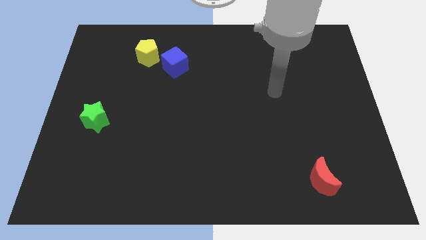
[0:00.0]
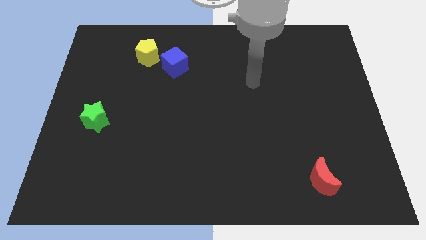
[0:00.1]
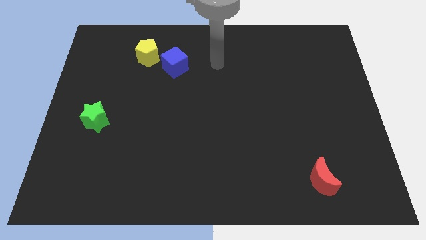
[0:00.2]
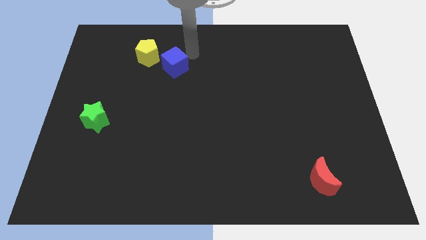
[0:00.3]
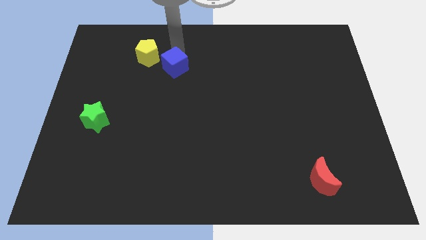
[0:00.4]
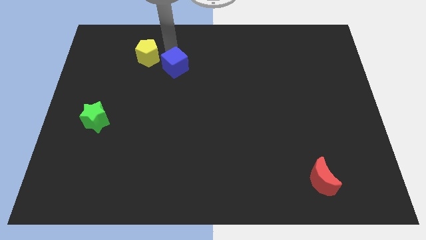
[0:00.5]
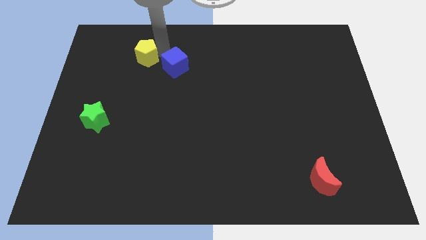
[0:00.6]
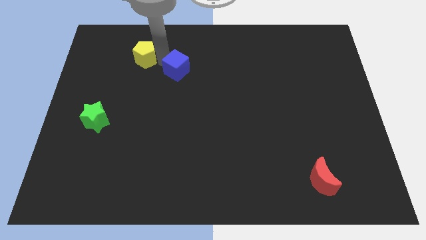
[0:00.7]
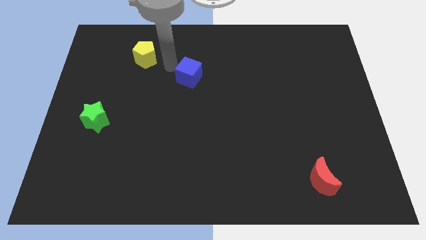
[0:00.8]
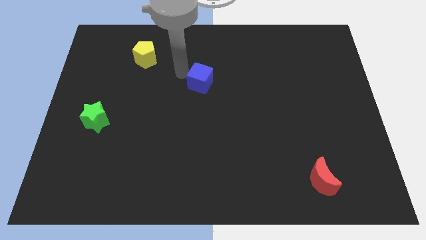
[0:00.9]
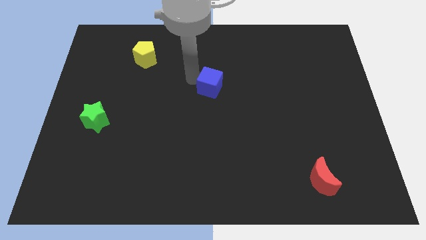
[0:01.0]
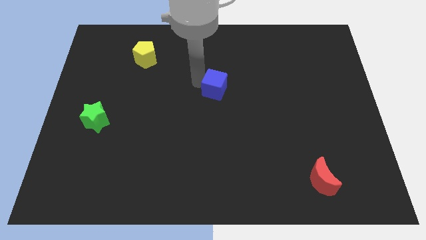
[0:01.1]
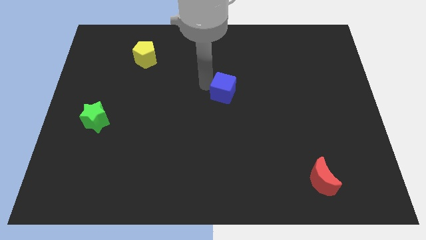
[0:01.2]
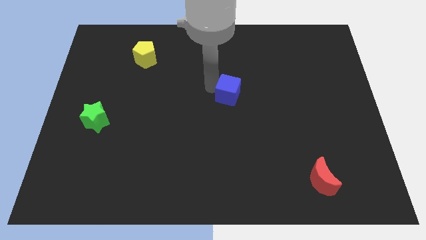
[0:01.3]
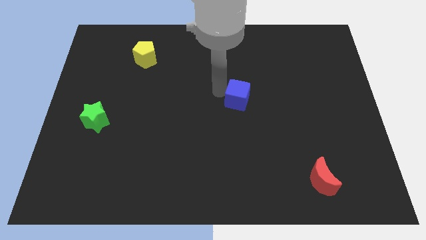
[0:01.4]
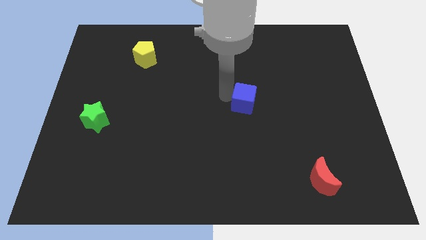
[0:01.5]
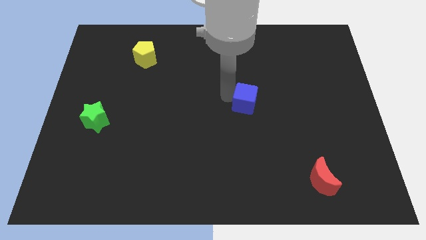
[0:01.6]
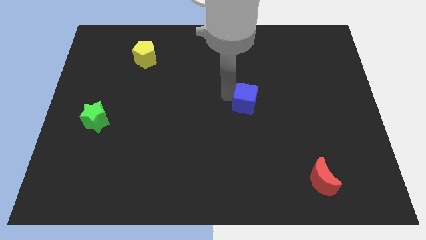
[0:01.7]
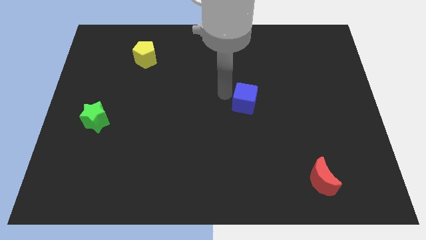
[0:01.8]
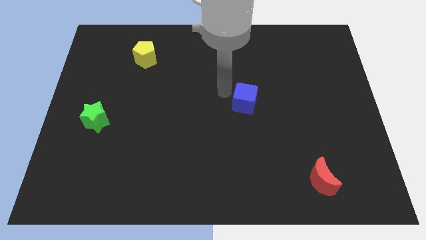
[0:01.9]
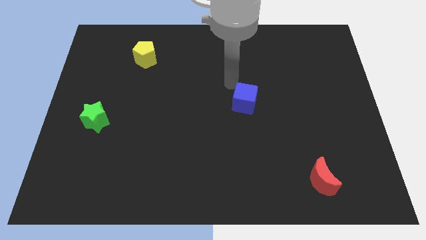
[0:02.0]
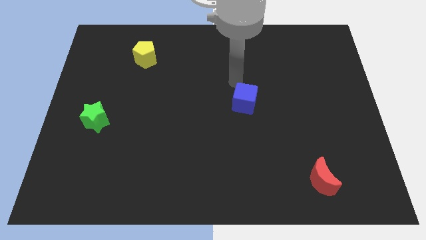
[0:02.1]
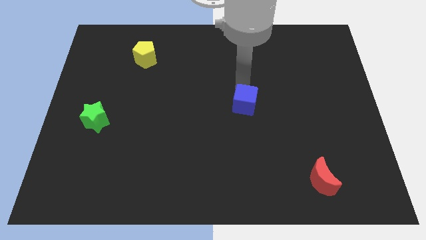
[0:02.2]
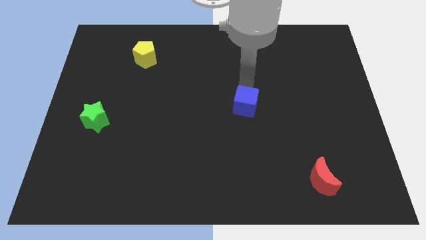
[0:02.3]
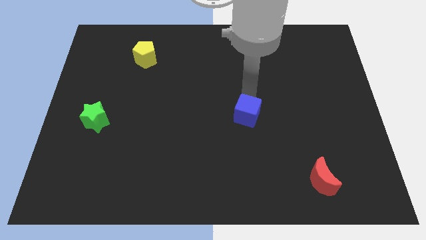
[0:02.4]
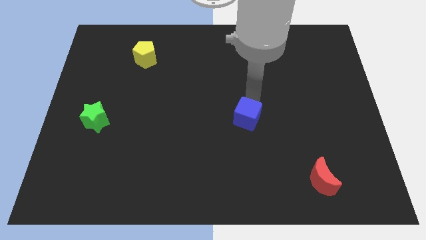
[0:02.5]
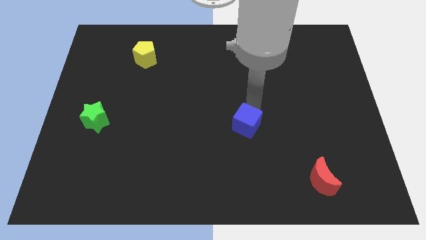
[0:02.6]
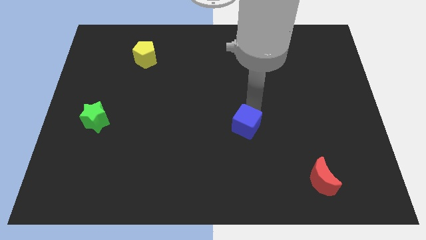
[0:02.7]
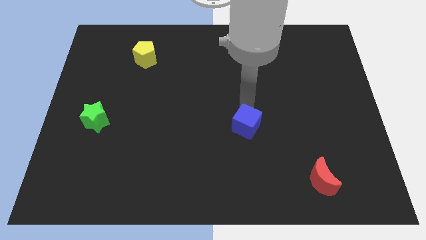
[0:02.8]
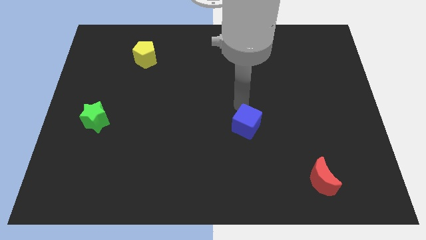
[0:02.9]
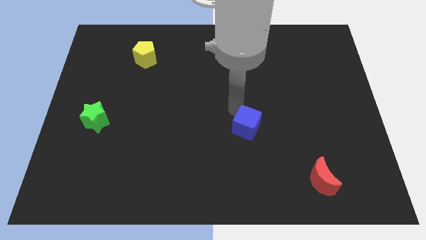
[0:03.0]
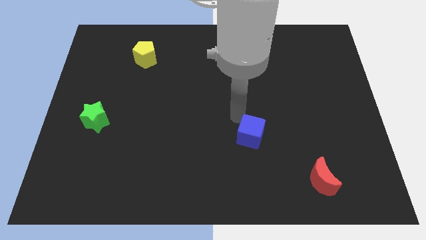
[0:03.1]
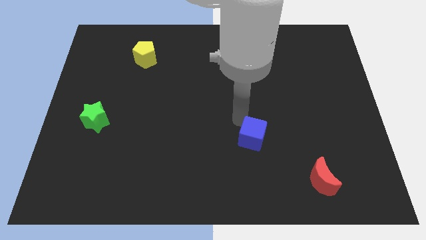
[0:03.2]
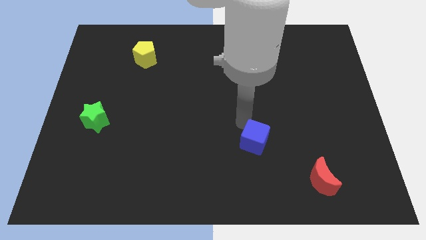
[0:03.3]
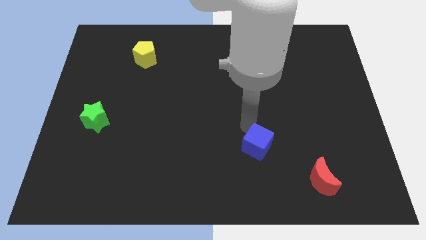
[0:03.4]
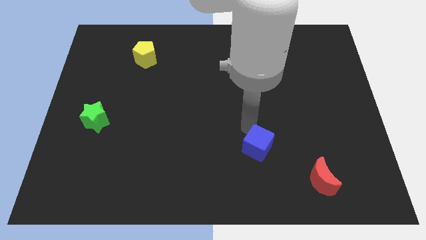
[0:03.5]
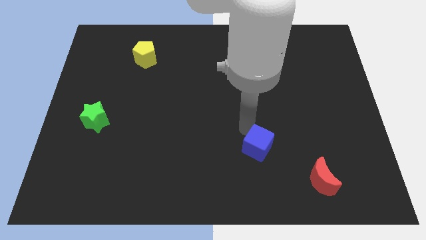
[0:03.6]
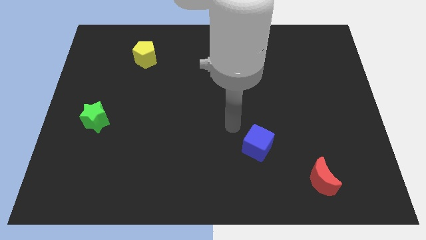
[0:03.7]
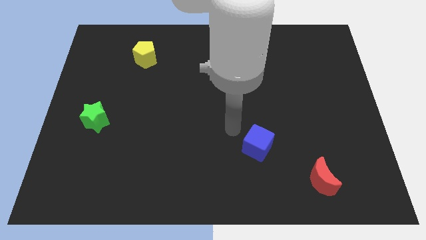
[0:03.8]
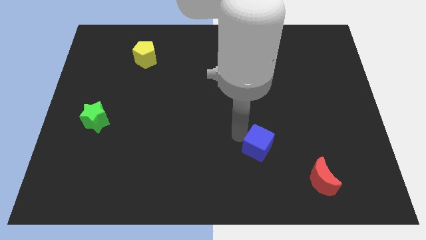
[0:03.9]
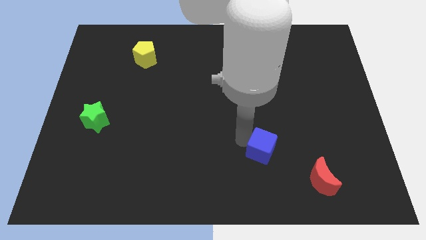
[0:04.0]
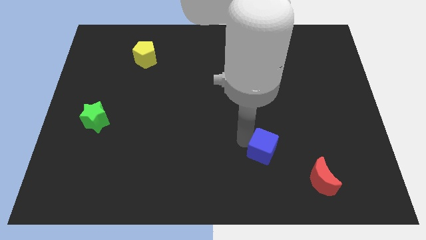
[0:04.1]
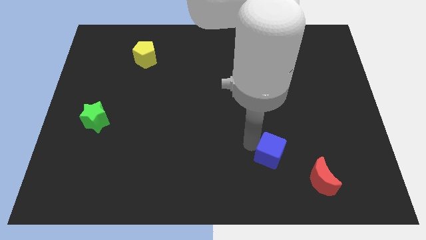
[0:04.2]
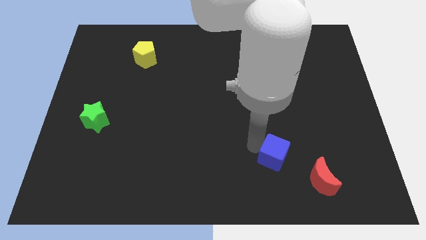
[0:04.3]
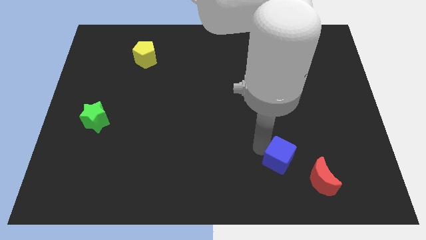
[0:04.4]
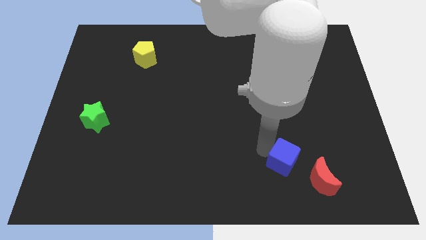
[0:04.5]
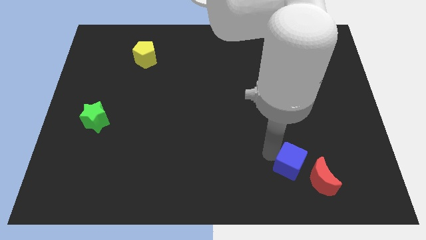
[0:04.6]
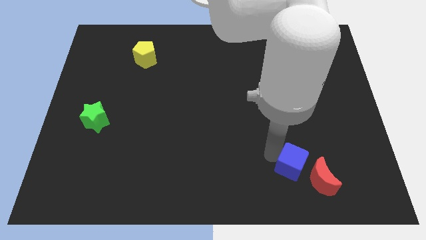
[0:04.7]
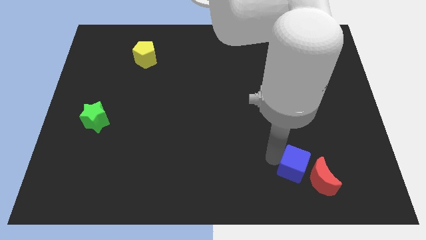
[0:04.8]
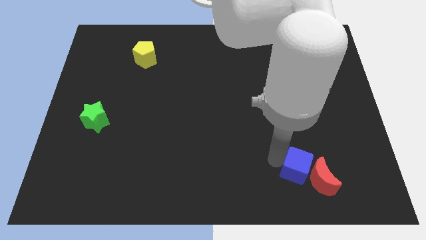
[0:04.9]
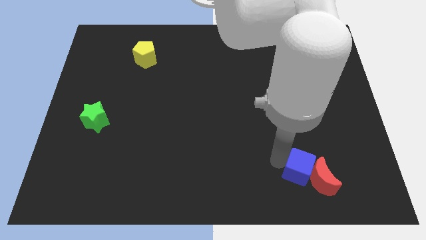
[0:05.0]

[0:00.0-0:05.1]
put the cube to the red moon

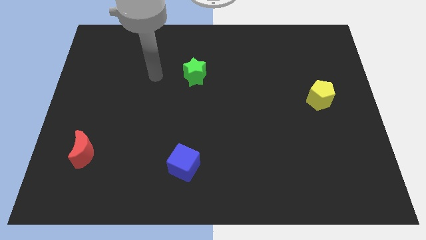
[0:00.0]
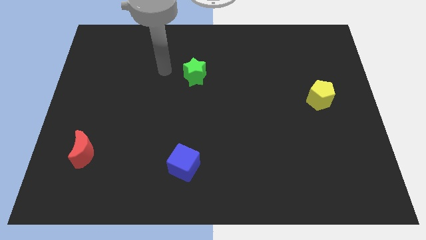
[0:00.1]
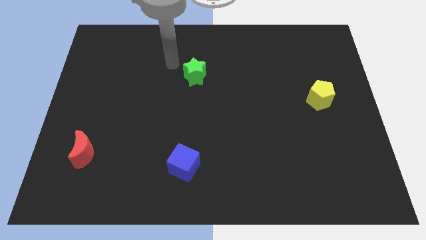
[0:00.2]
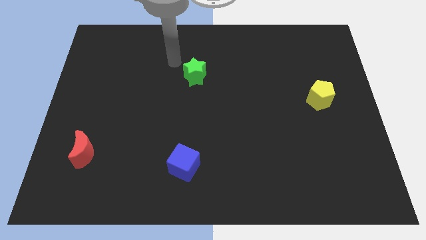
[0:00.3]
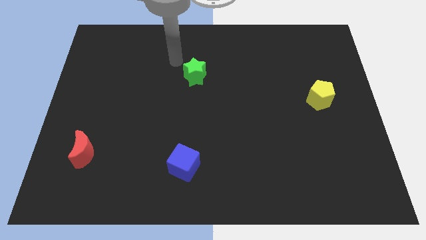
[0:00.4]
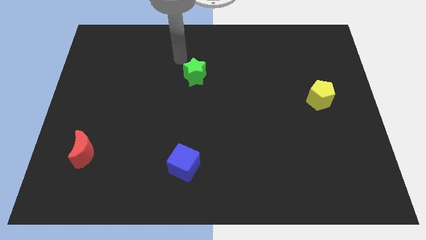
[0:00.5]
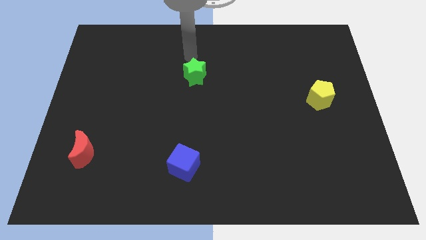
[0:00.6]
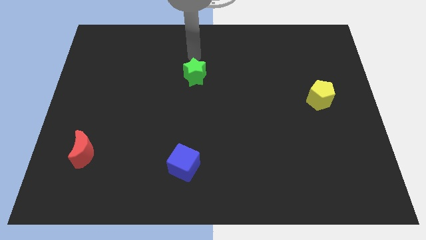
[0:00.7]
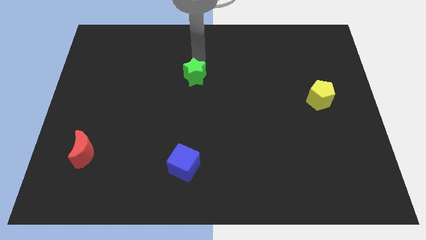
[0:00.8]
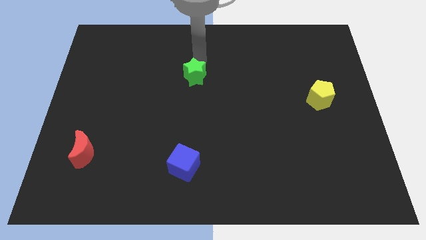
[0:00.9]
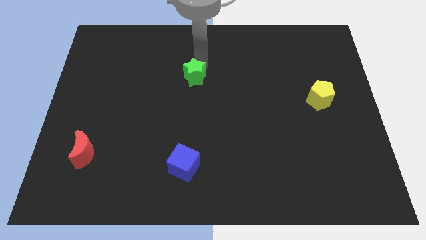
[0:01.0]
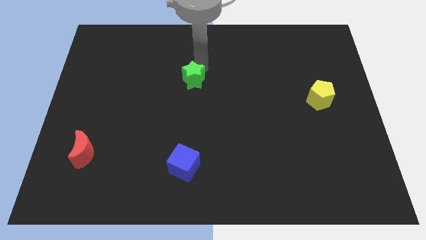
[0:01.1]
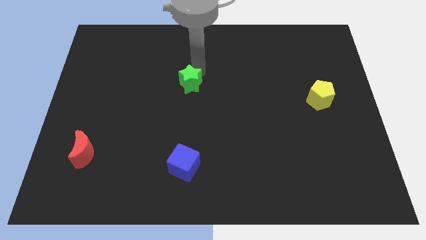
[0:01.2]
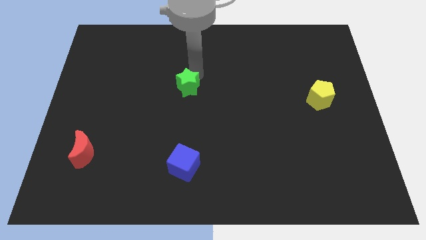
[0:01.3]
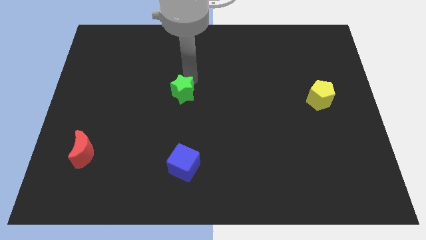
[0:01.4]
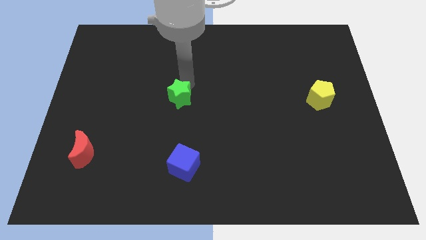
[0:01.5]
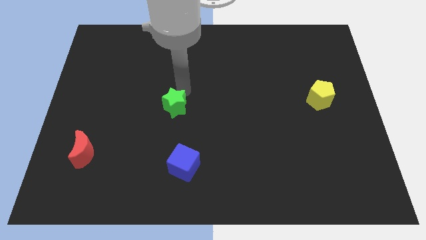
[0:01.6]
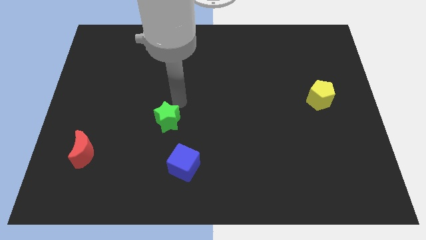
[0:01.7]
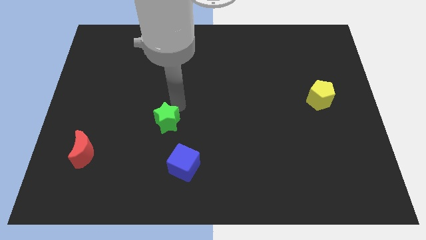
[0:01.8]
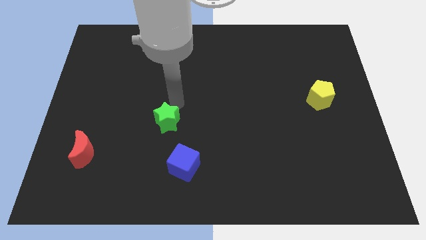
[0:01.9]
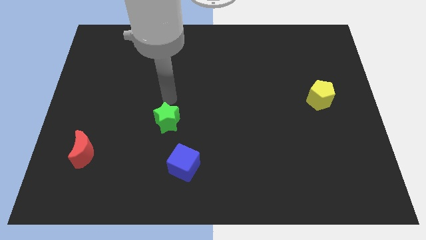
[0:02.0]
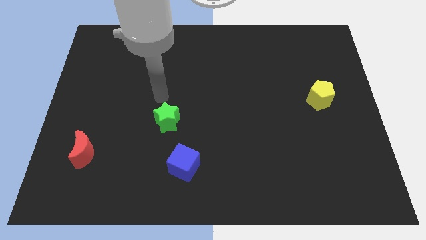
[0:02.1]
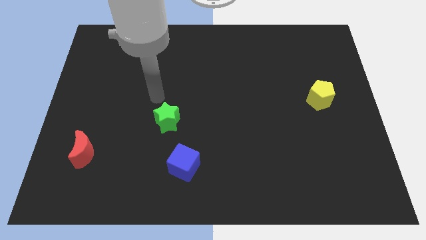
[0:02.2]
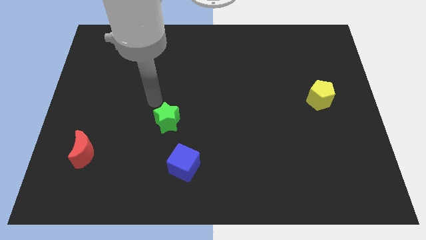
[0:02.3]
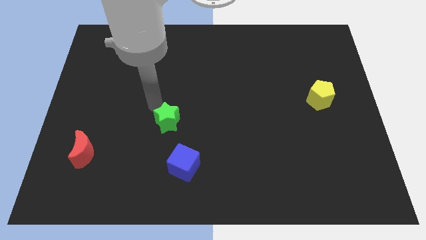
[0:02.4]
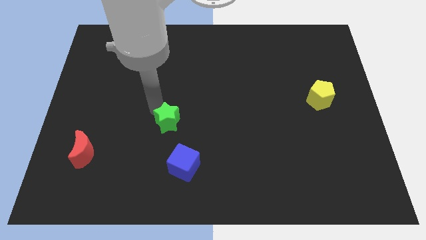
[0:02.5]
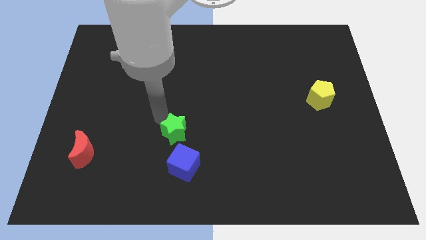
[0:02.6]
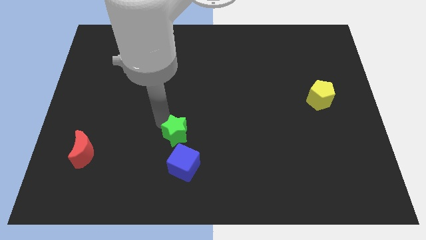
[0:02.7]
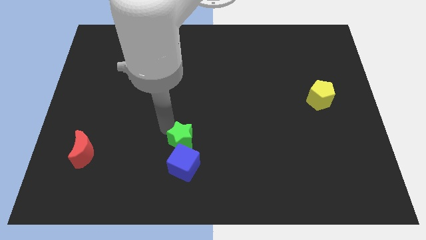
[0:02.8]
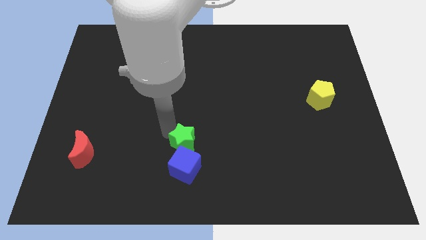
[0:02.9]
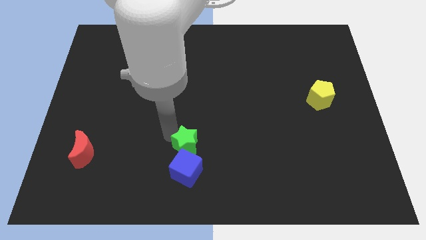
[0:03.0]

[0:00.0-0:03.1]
push the star next to the cube
